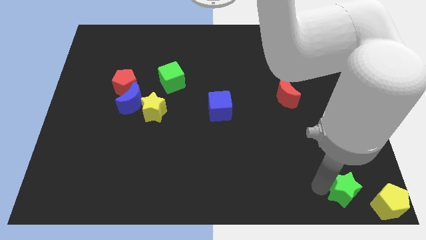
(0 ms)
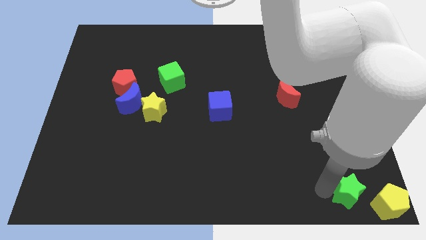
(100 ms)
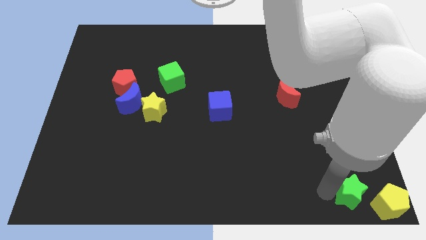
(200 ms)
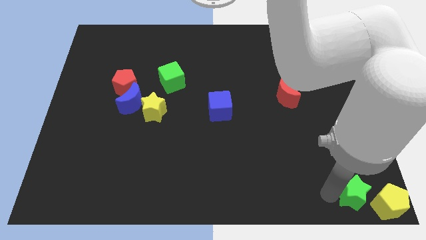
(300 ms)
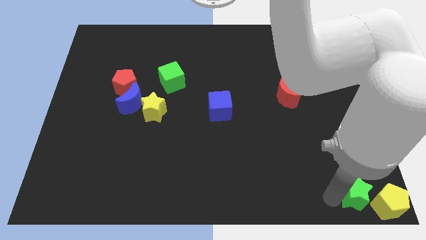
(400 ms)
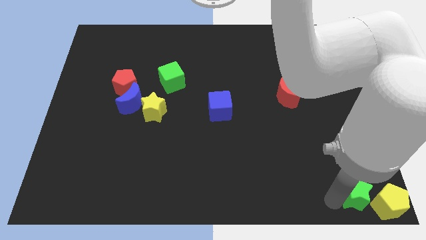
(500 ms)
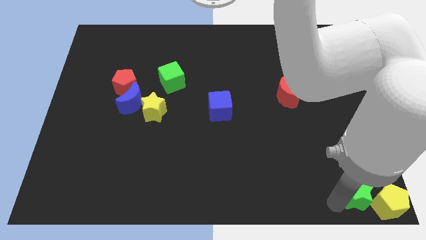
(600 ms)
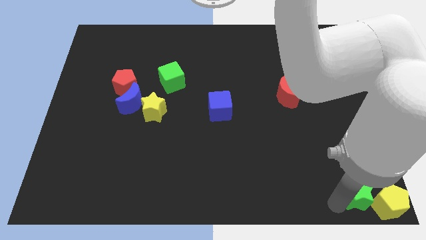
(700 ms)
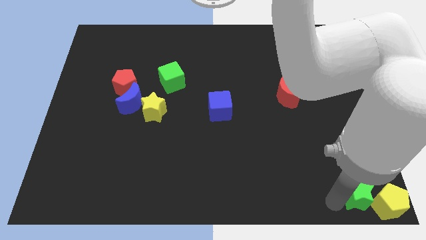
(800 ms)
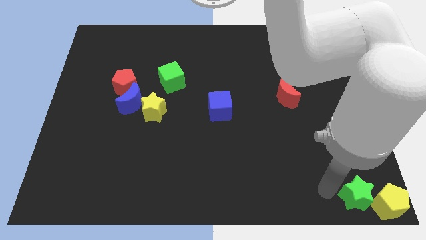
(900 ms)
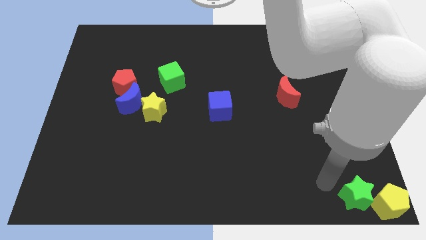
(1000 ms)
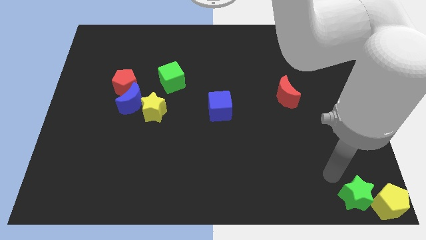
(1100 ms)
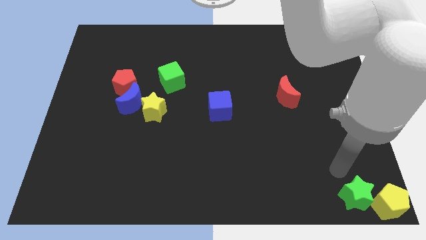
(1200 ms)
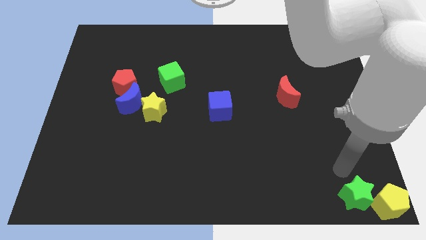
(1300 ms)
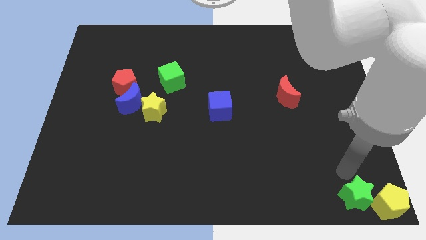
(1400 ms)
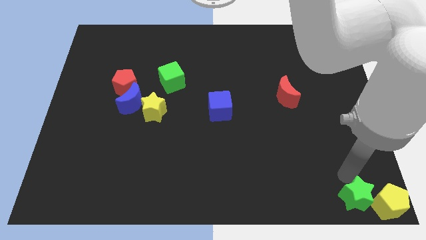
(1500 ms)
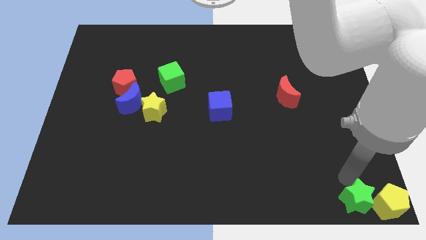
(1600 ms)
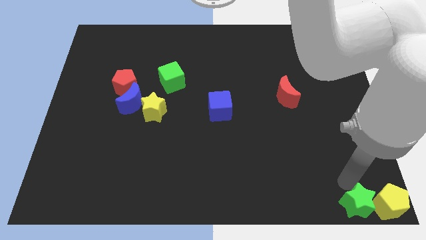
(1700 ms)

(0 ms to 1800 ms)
place green star to the bottom right corner of the board

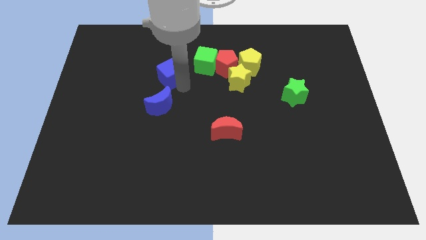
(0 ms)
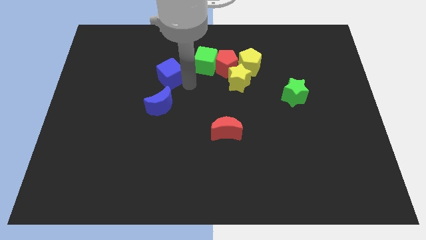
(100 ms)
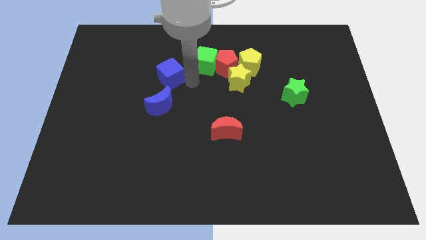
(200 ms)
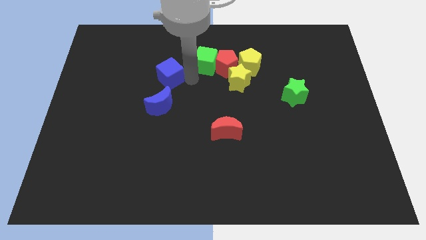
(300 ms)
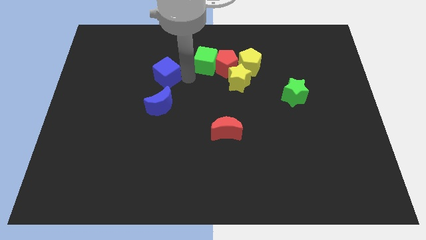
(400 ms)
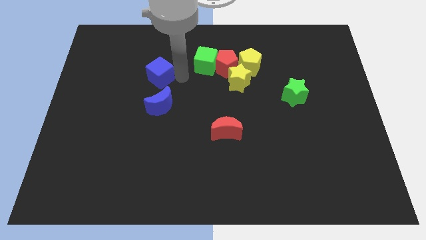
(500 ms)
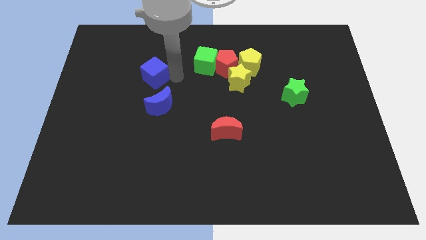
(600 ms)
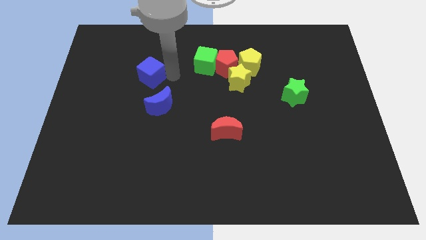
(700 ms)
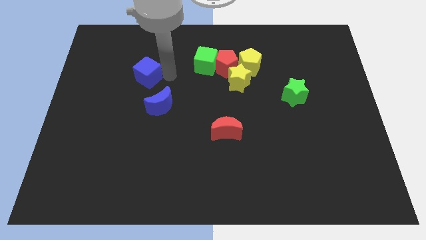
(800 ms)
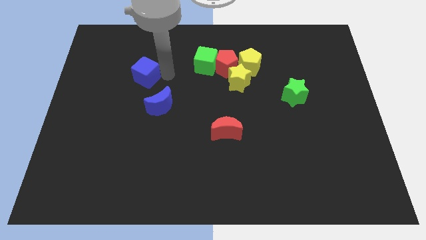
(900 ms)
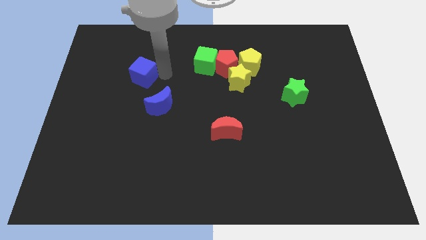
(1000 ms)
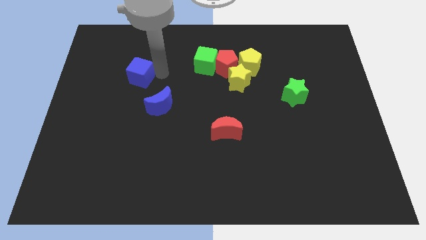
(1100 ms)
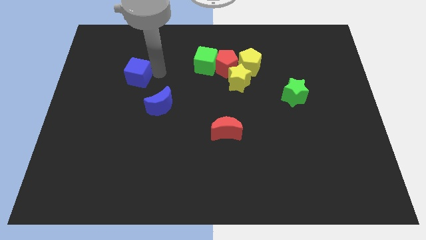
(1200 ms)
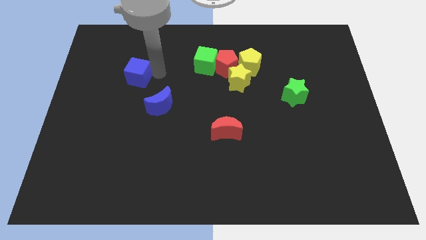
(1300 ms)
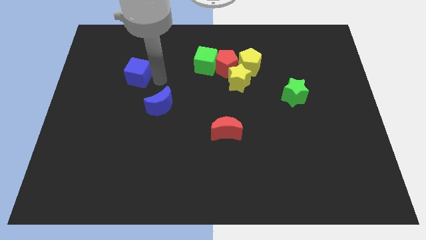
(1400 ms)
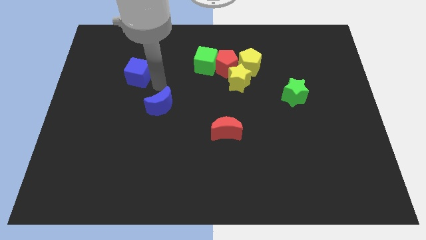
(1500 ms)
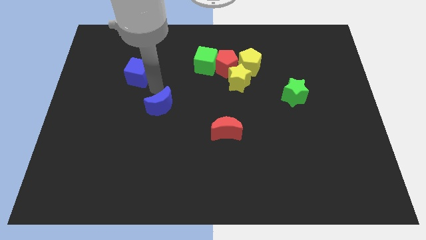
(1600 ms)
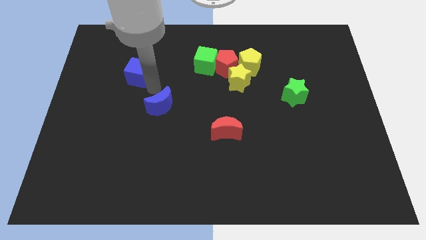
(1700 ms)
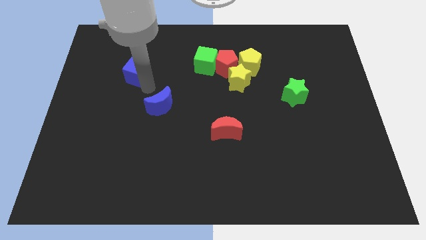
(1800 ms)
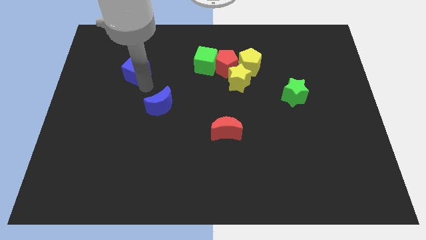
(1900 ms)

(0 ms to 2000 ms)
push the blue cube to the left

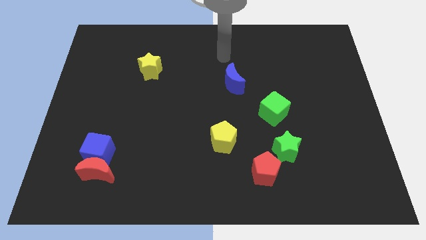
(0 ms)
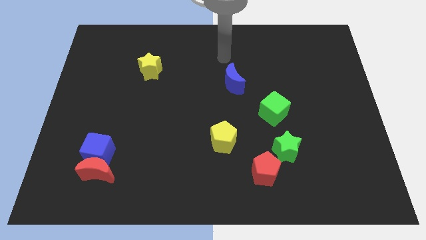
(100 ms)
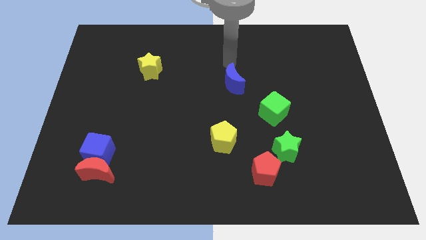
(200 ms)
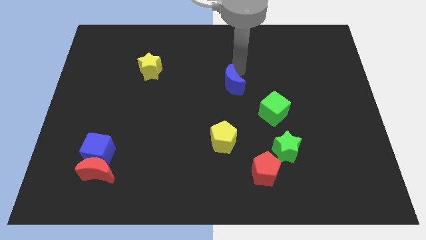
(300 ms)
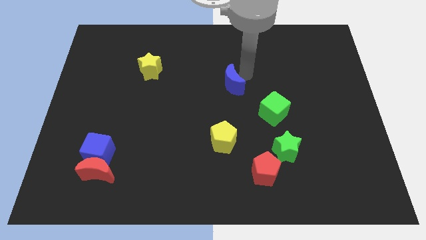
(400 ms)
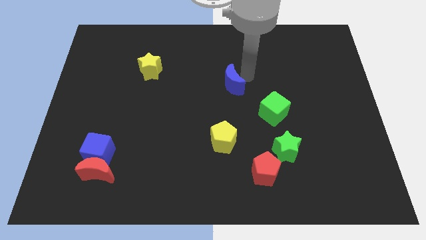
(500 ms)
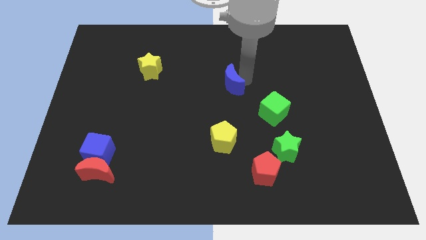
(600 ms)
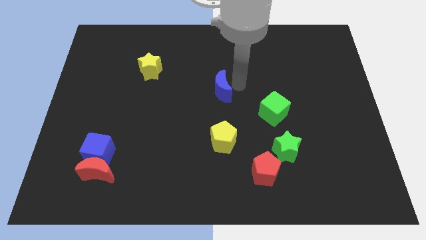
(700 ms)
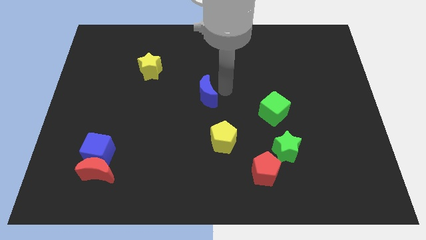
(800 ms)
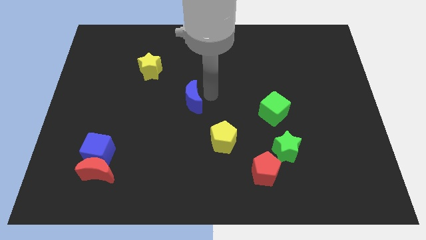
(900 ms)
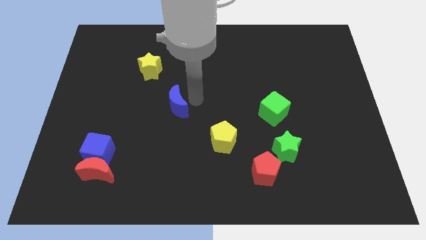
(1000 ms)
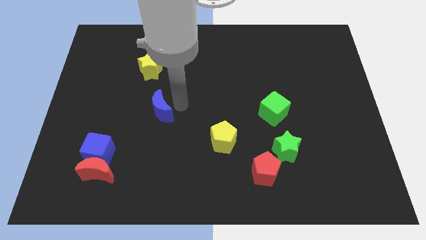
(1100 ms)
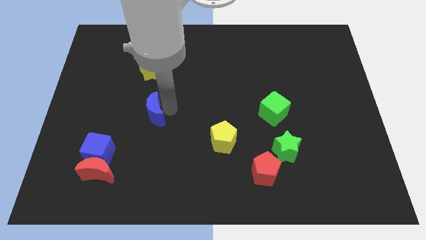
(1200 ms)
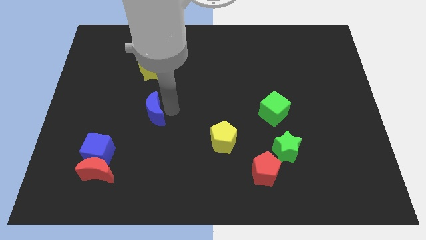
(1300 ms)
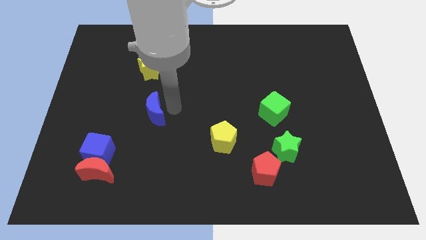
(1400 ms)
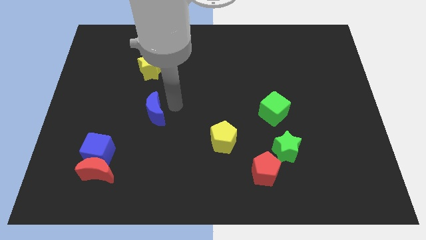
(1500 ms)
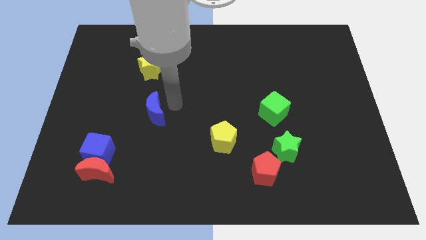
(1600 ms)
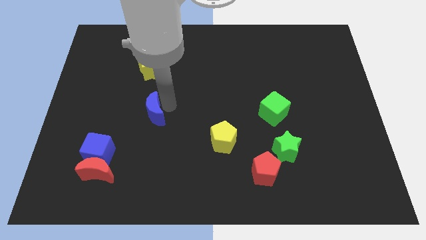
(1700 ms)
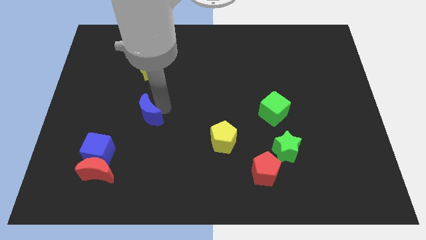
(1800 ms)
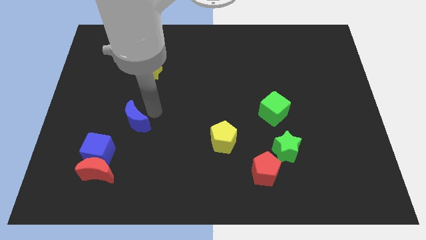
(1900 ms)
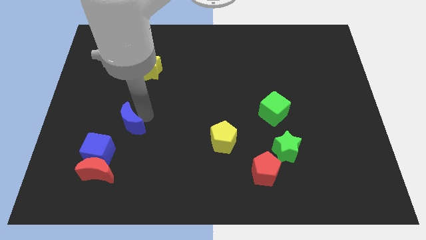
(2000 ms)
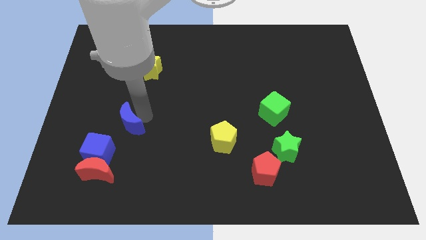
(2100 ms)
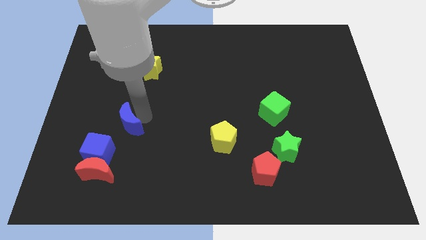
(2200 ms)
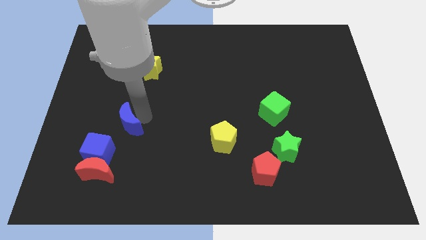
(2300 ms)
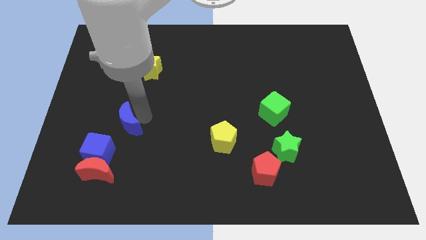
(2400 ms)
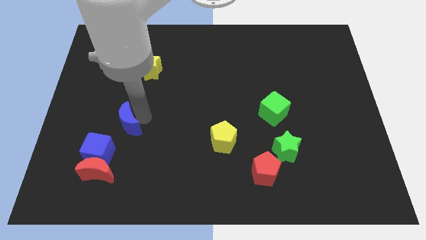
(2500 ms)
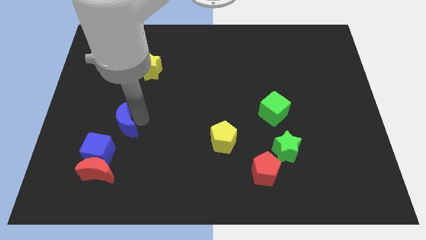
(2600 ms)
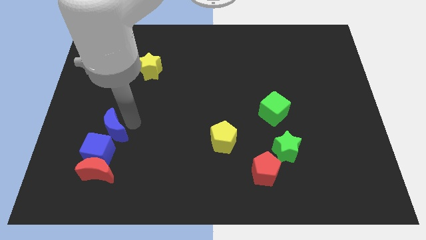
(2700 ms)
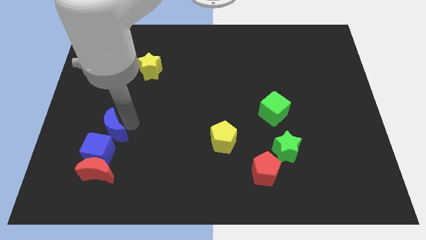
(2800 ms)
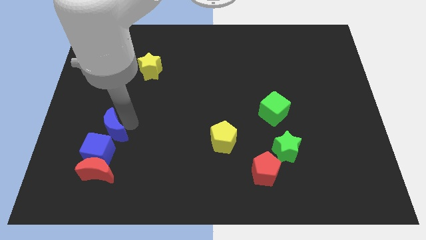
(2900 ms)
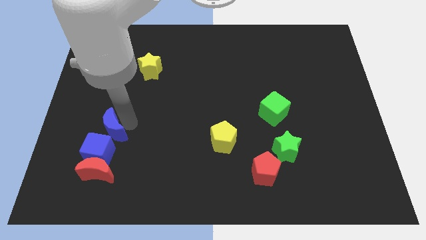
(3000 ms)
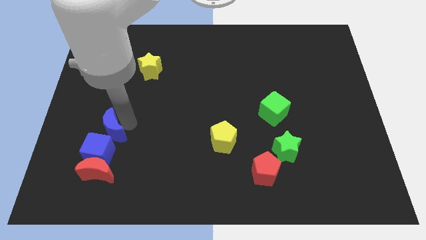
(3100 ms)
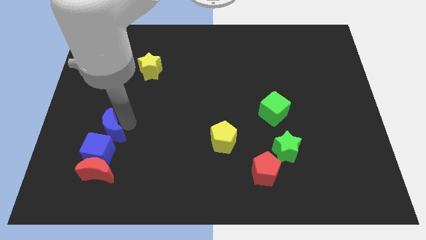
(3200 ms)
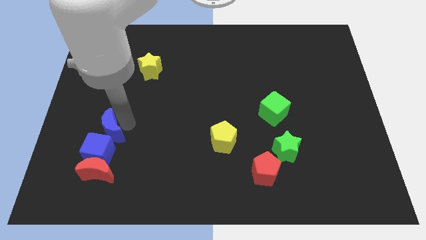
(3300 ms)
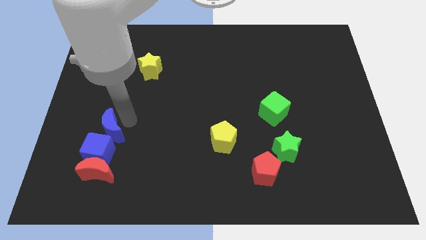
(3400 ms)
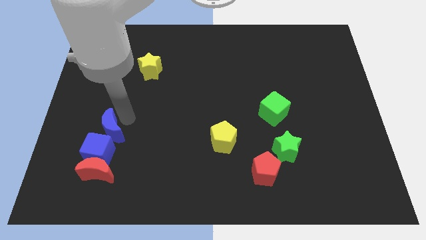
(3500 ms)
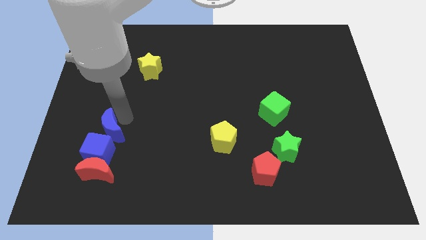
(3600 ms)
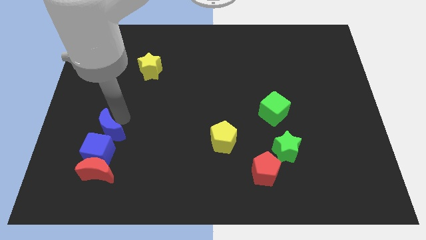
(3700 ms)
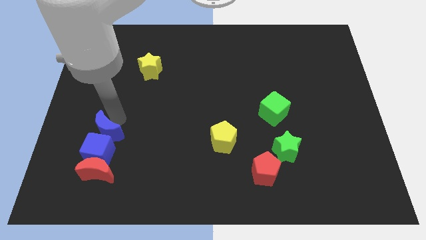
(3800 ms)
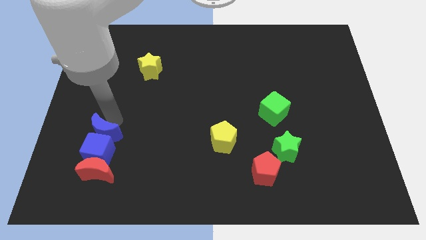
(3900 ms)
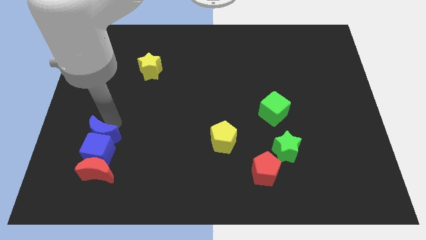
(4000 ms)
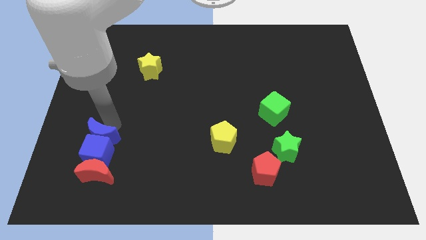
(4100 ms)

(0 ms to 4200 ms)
place the blue moon on the top of the blue cube

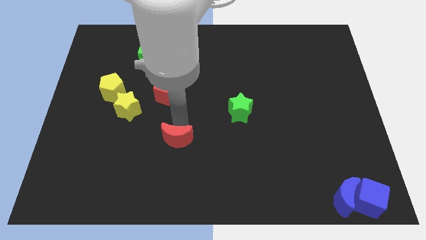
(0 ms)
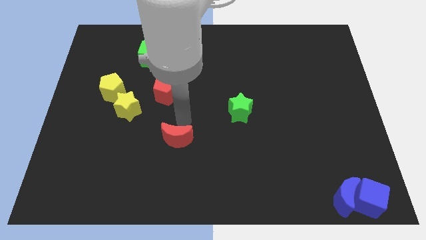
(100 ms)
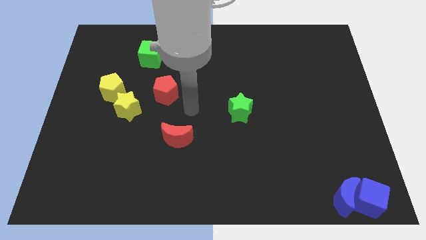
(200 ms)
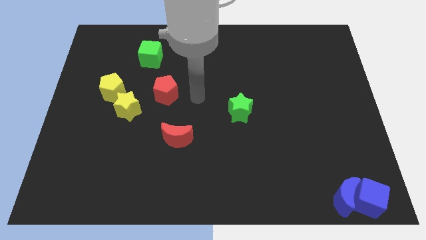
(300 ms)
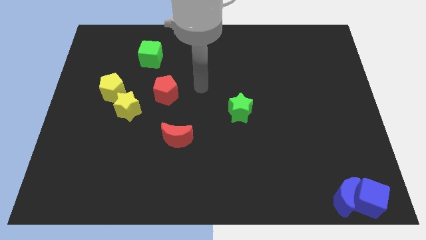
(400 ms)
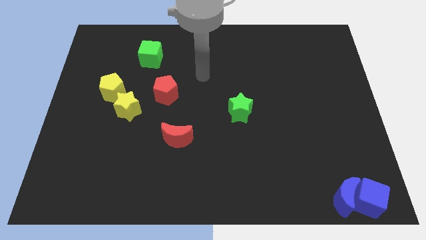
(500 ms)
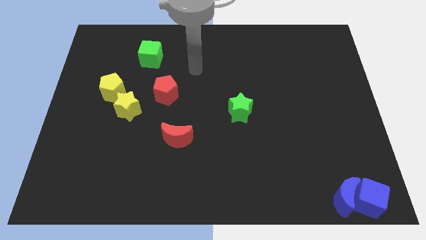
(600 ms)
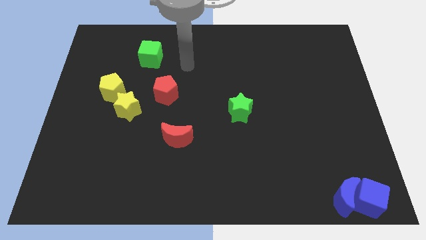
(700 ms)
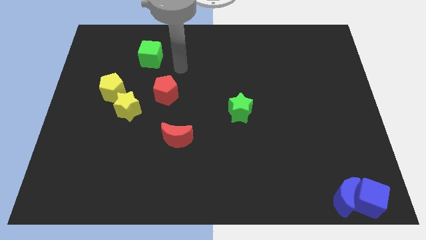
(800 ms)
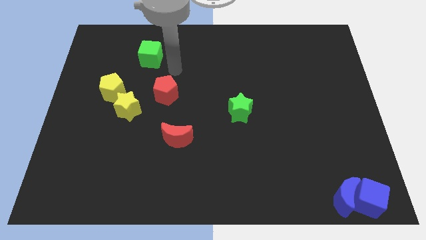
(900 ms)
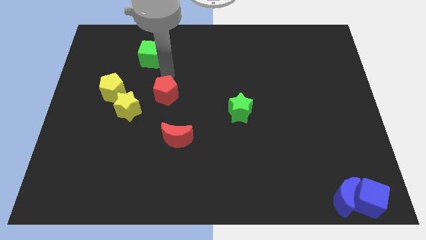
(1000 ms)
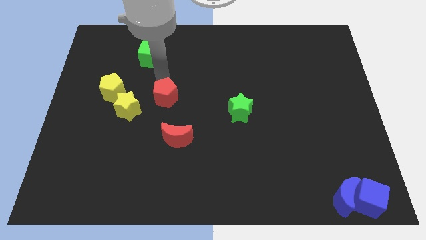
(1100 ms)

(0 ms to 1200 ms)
move your arm near to the red pentagon
